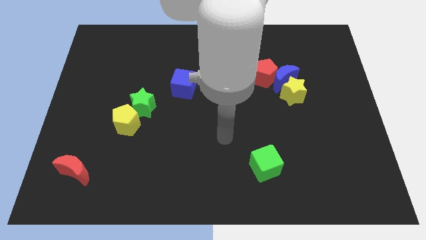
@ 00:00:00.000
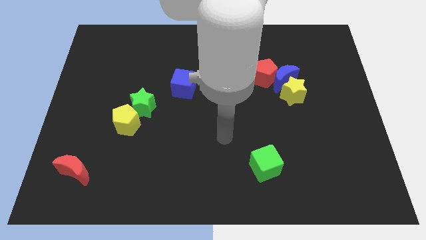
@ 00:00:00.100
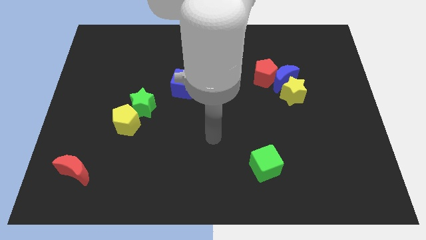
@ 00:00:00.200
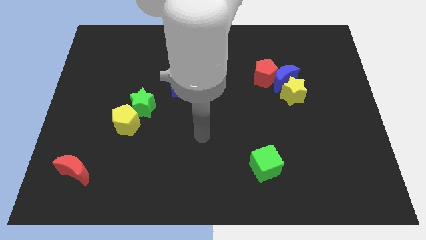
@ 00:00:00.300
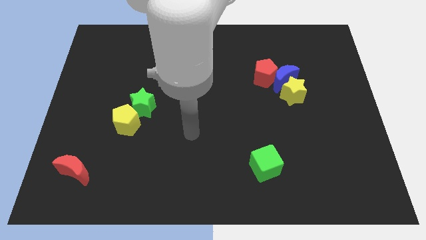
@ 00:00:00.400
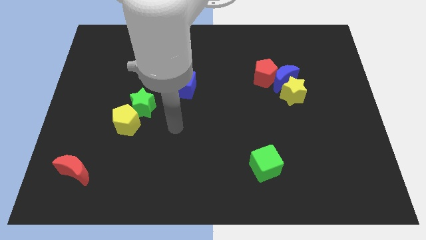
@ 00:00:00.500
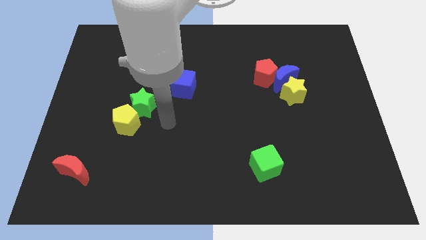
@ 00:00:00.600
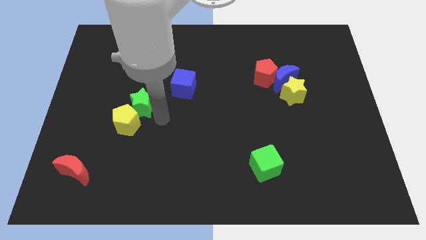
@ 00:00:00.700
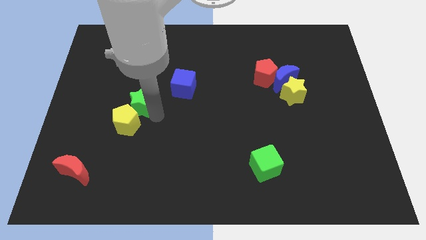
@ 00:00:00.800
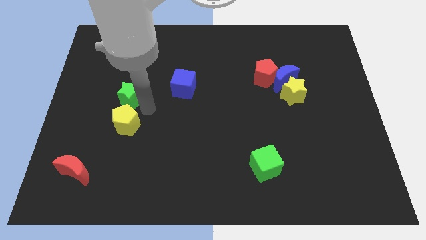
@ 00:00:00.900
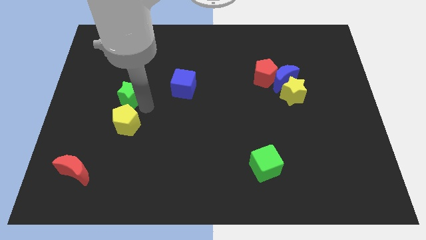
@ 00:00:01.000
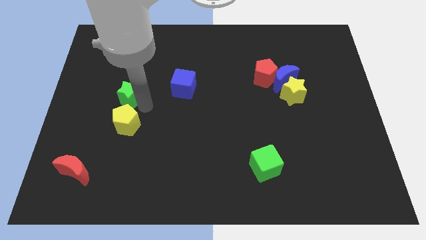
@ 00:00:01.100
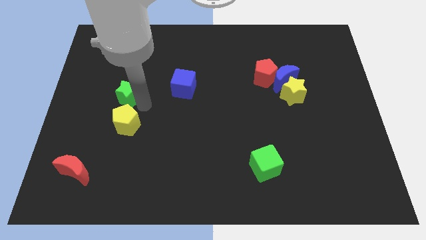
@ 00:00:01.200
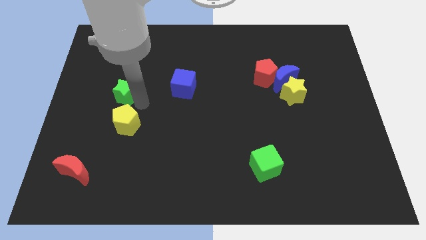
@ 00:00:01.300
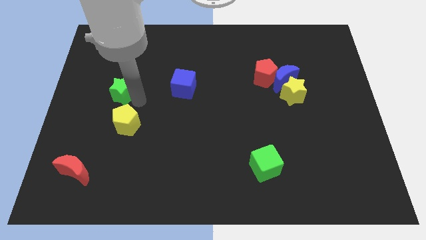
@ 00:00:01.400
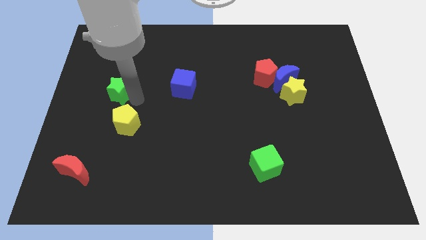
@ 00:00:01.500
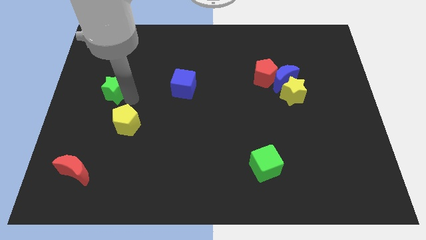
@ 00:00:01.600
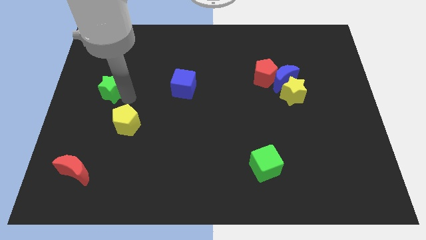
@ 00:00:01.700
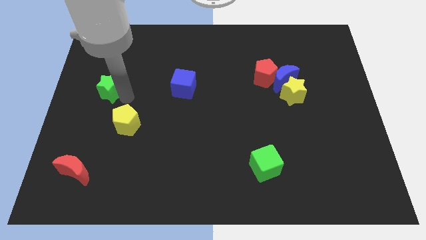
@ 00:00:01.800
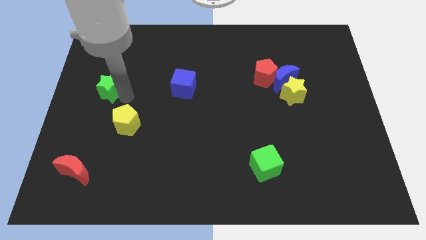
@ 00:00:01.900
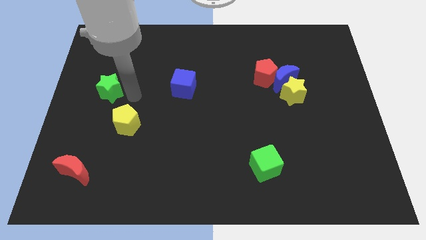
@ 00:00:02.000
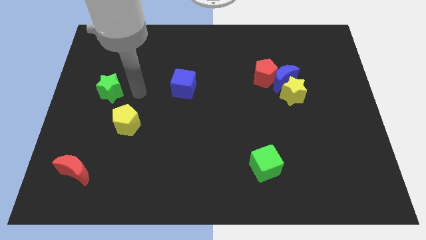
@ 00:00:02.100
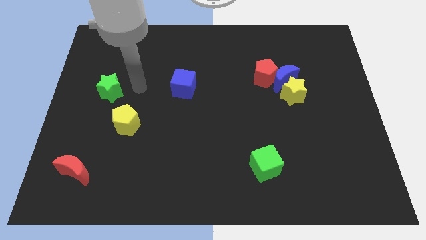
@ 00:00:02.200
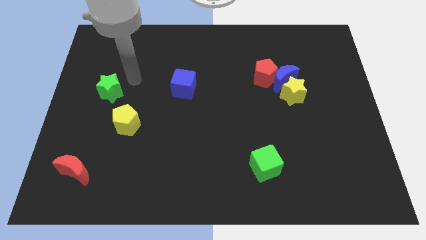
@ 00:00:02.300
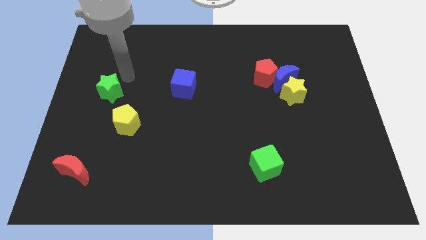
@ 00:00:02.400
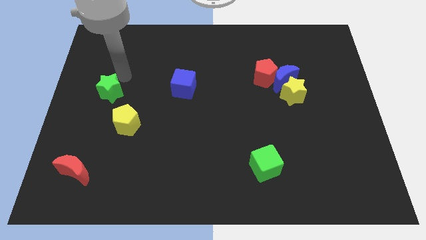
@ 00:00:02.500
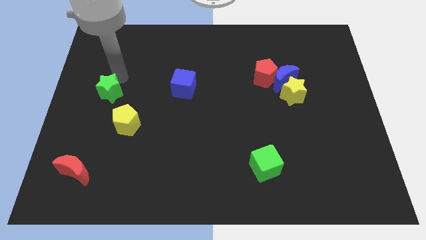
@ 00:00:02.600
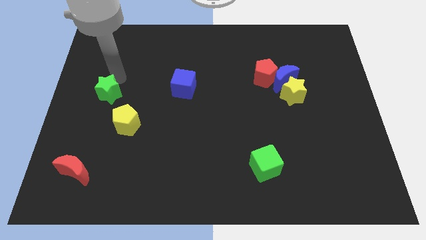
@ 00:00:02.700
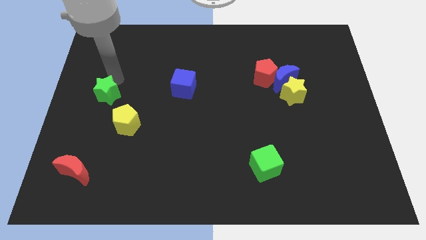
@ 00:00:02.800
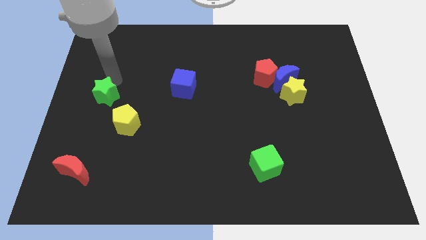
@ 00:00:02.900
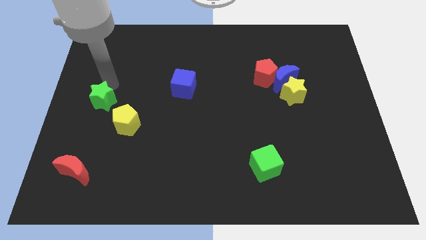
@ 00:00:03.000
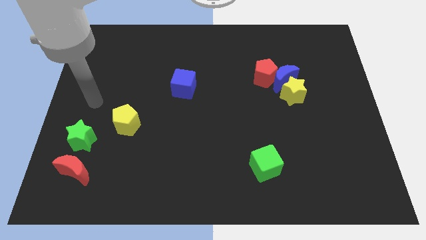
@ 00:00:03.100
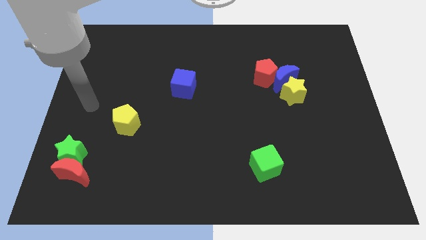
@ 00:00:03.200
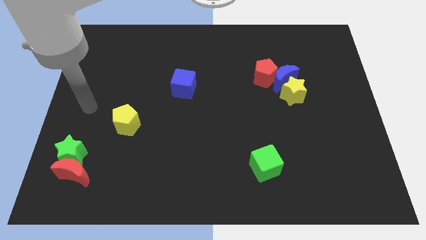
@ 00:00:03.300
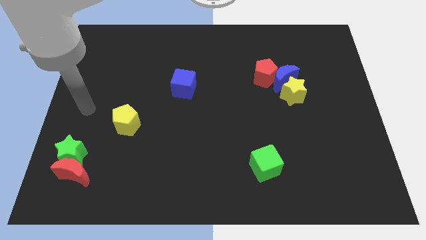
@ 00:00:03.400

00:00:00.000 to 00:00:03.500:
slide the green star towards the red moon

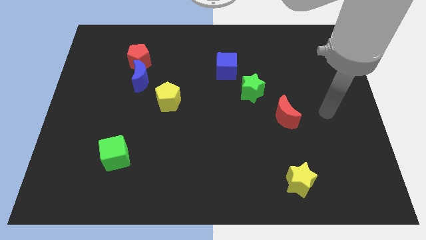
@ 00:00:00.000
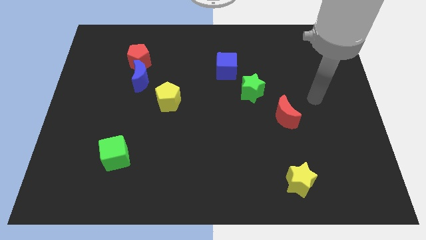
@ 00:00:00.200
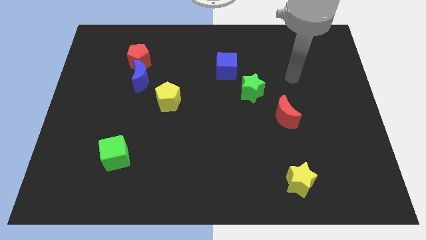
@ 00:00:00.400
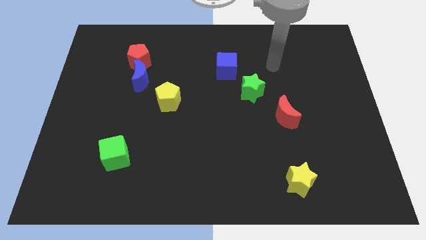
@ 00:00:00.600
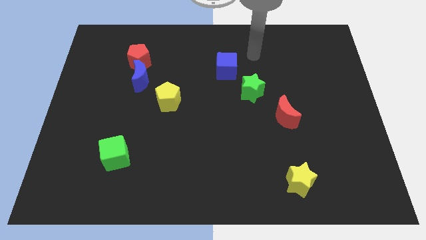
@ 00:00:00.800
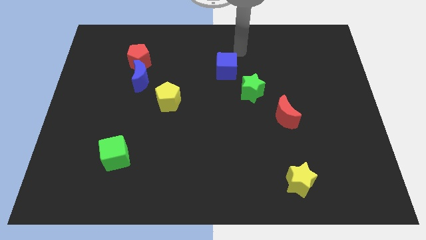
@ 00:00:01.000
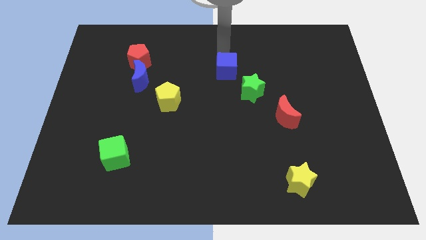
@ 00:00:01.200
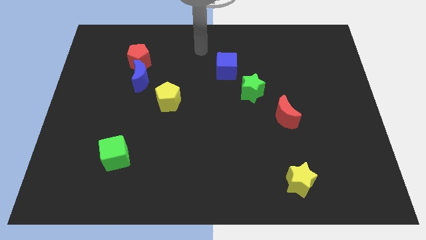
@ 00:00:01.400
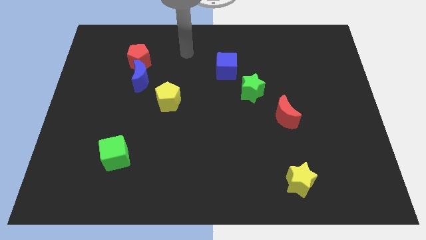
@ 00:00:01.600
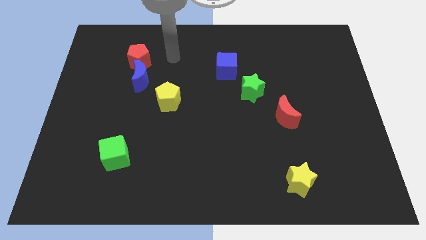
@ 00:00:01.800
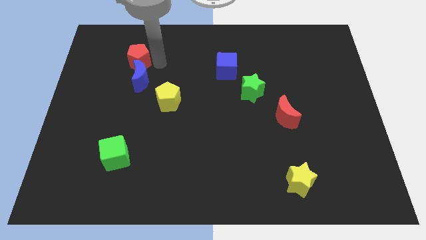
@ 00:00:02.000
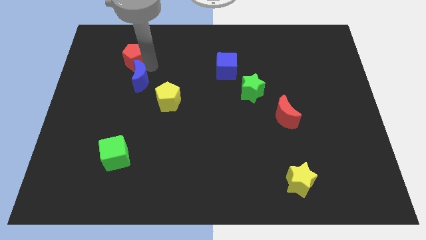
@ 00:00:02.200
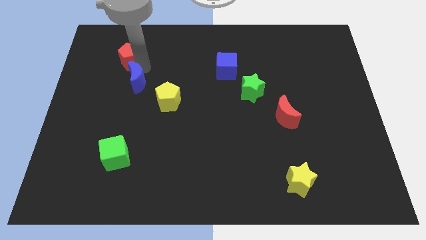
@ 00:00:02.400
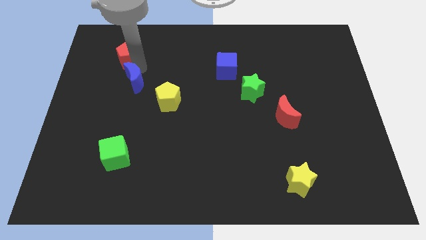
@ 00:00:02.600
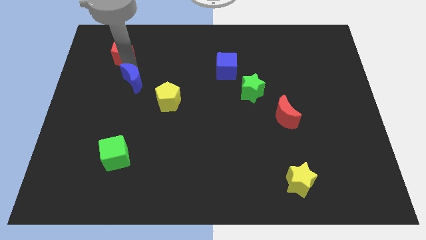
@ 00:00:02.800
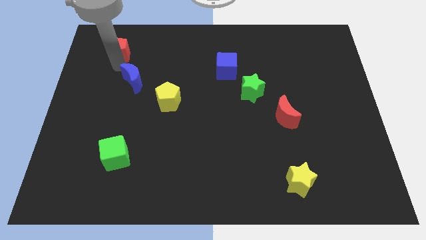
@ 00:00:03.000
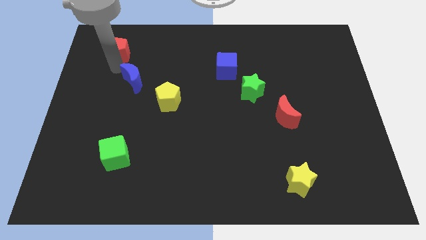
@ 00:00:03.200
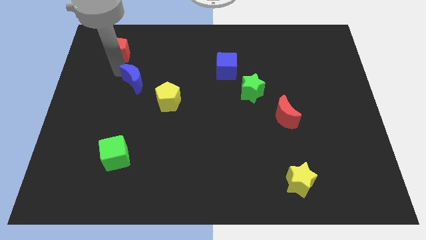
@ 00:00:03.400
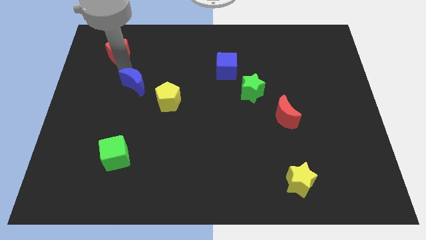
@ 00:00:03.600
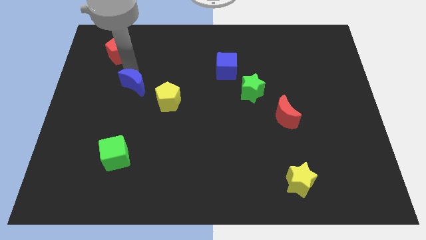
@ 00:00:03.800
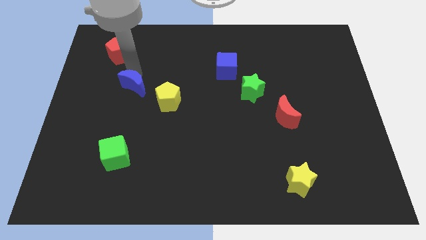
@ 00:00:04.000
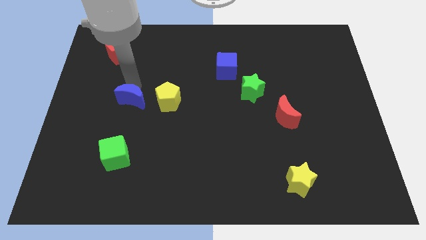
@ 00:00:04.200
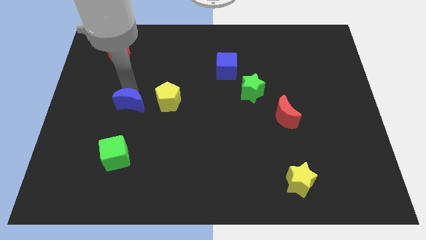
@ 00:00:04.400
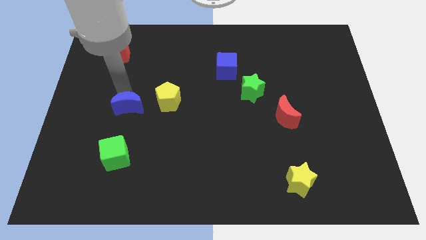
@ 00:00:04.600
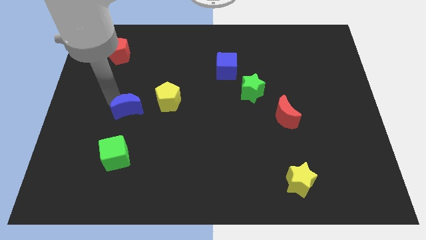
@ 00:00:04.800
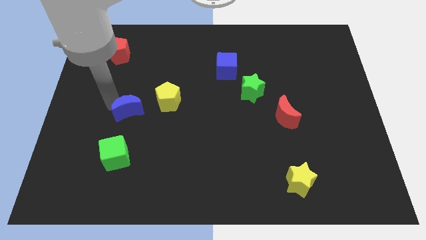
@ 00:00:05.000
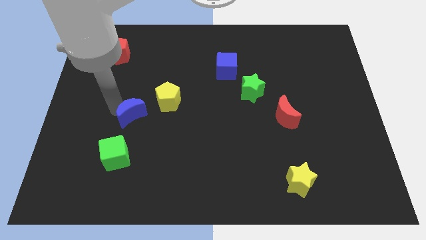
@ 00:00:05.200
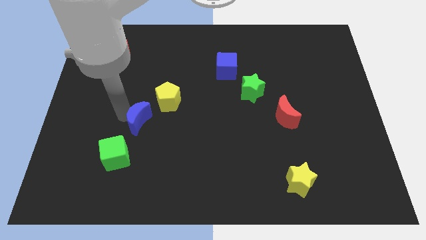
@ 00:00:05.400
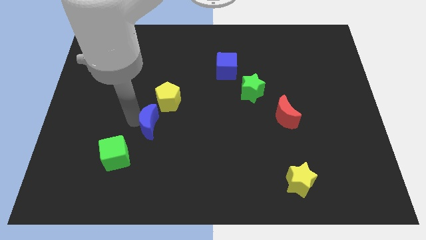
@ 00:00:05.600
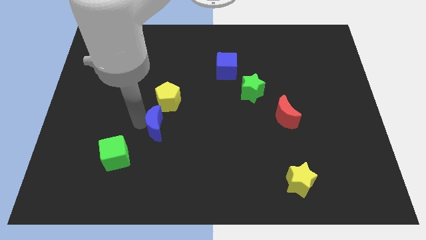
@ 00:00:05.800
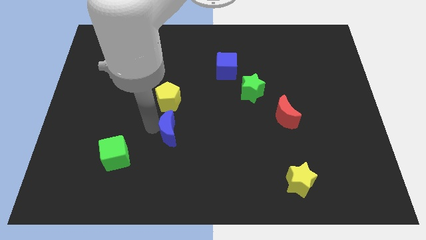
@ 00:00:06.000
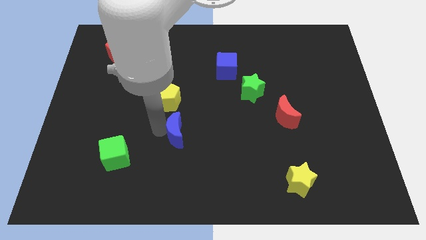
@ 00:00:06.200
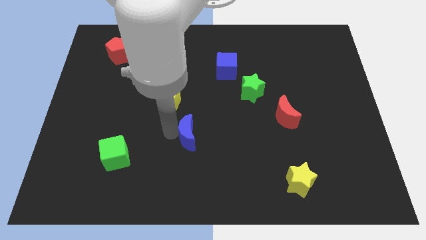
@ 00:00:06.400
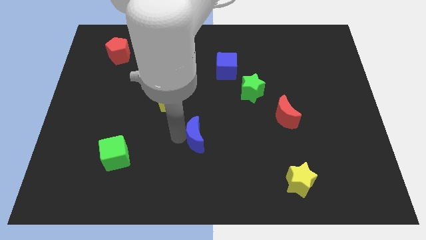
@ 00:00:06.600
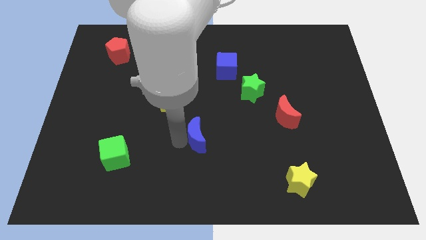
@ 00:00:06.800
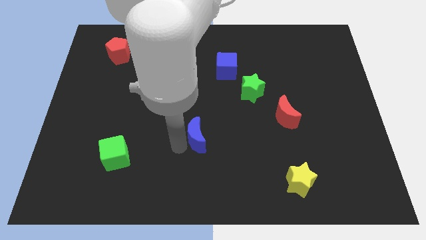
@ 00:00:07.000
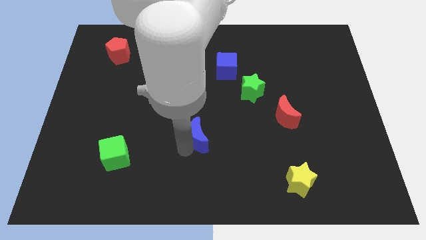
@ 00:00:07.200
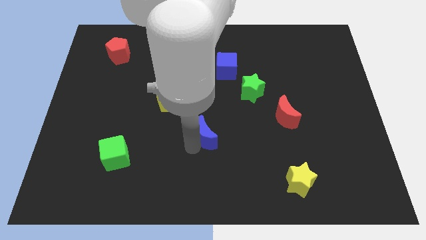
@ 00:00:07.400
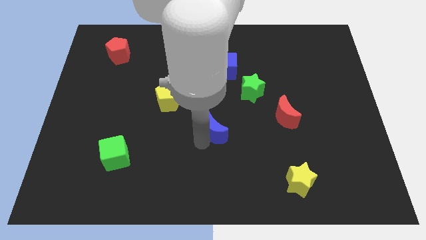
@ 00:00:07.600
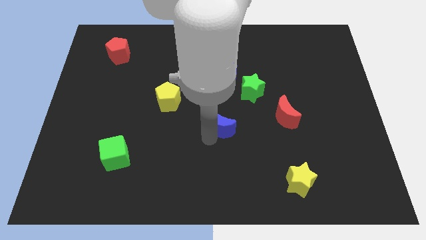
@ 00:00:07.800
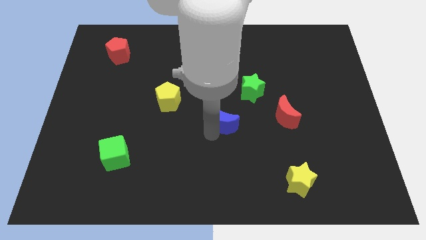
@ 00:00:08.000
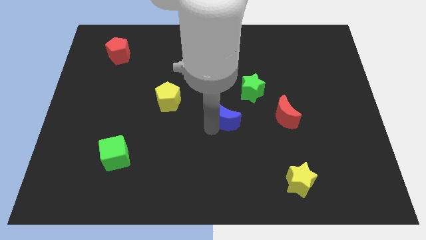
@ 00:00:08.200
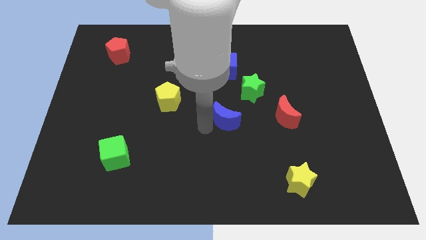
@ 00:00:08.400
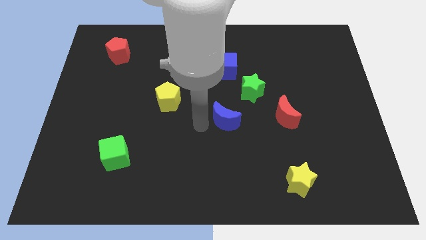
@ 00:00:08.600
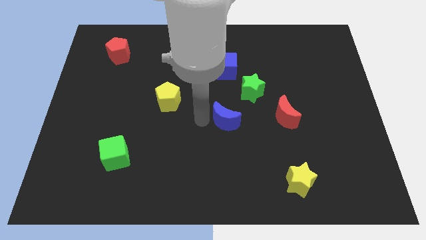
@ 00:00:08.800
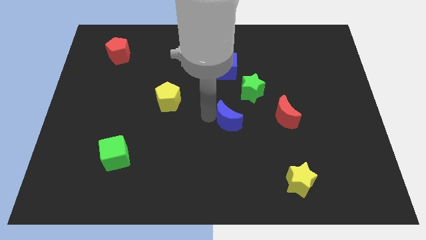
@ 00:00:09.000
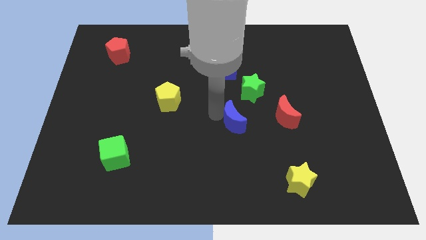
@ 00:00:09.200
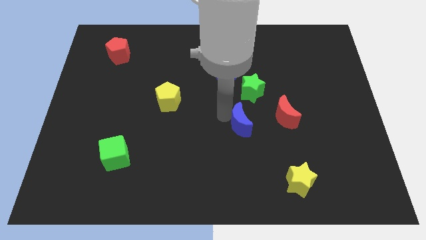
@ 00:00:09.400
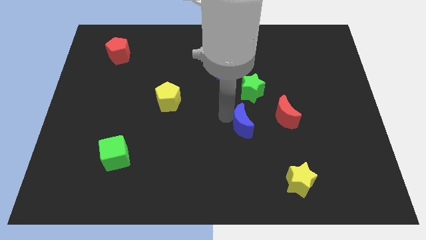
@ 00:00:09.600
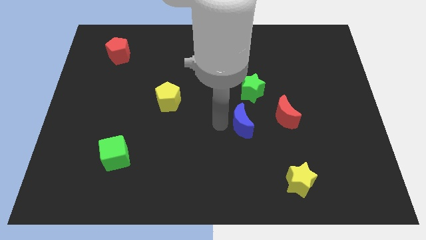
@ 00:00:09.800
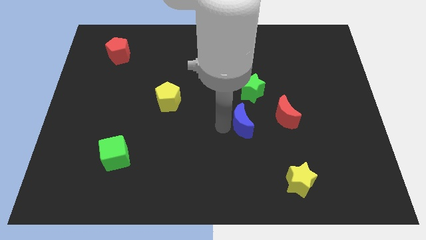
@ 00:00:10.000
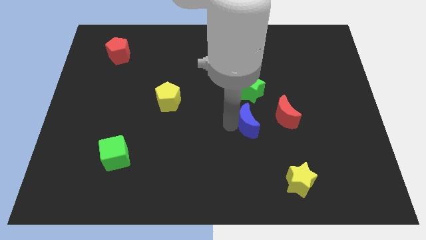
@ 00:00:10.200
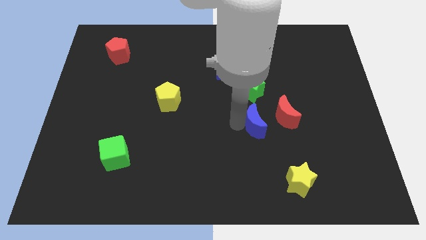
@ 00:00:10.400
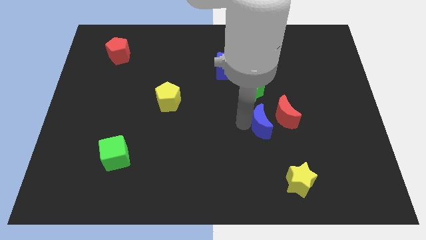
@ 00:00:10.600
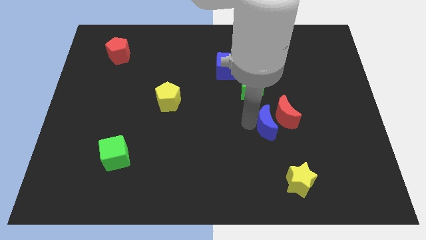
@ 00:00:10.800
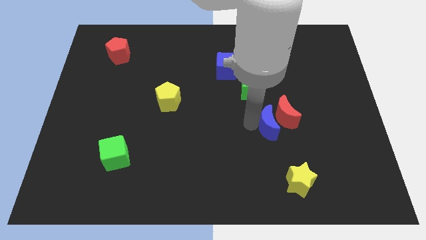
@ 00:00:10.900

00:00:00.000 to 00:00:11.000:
put the blue moon towards the red moon
